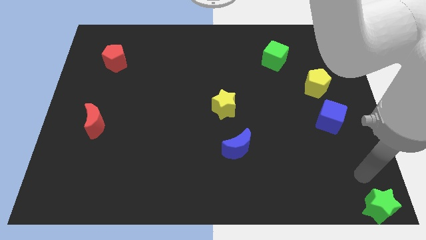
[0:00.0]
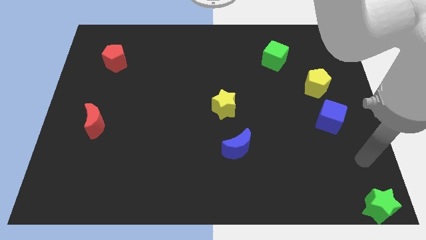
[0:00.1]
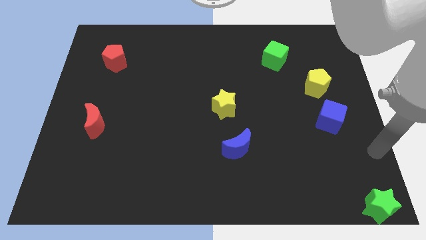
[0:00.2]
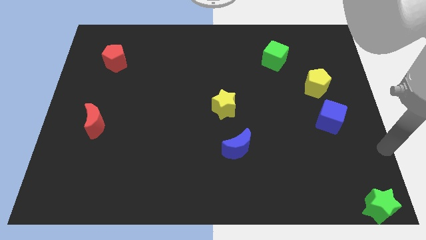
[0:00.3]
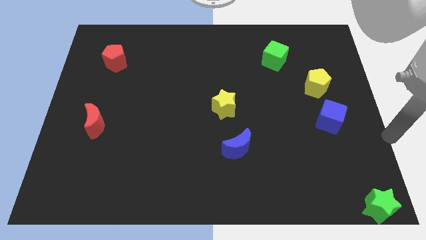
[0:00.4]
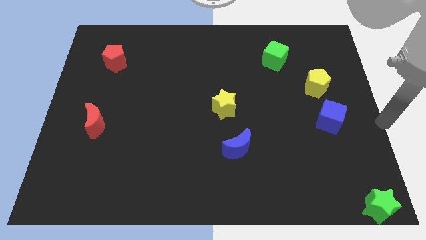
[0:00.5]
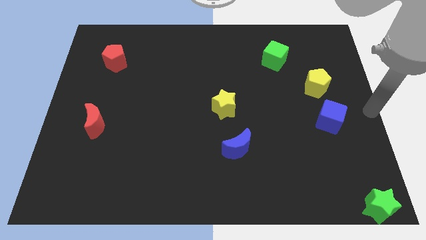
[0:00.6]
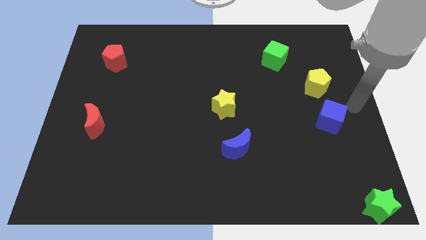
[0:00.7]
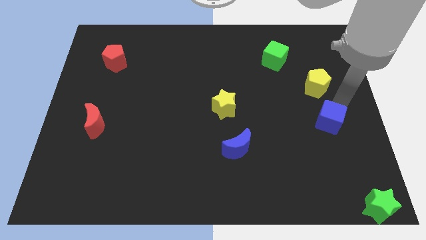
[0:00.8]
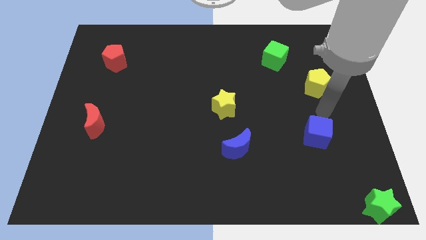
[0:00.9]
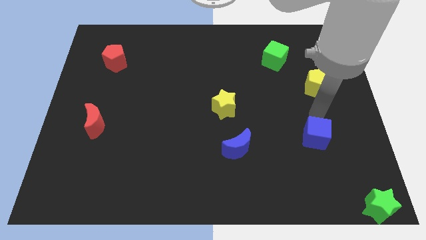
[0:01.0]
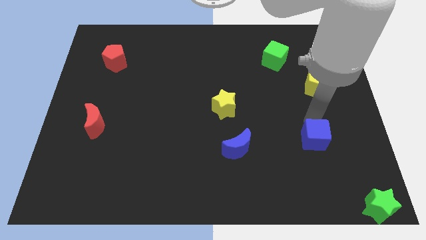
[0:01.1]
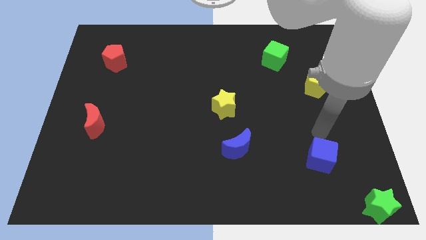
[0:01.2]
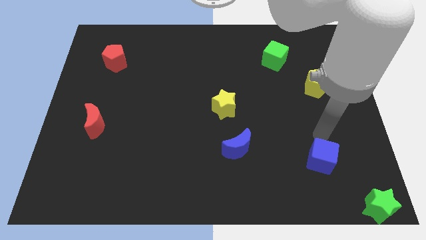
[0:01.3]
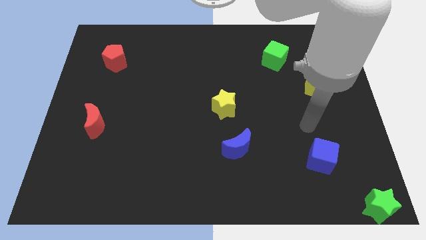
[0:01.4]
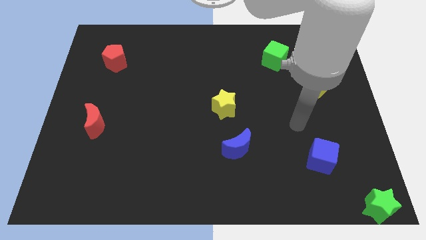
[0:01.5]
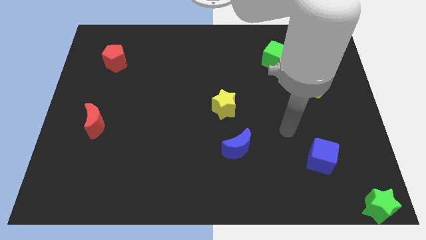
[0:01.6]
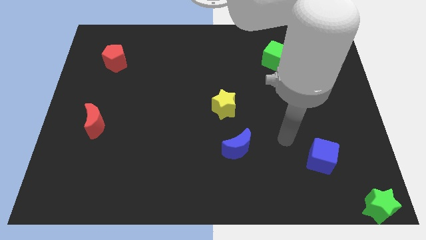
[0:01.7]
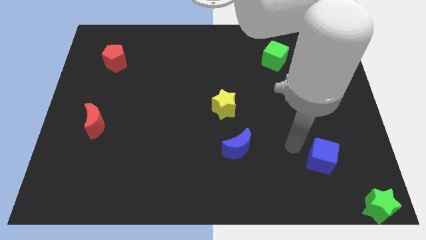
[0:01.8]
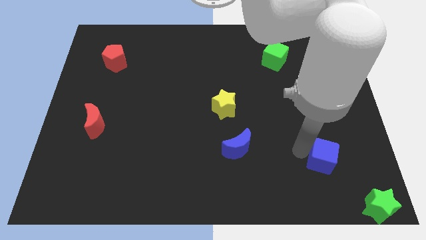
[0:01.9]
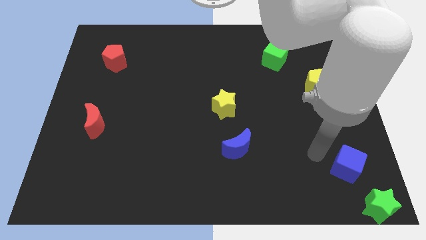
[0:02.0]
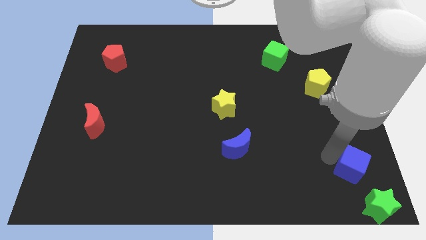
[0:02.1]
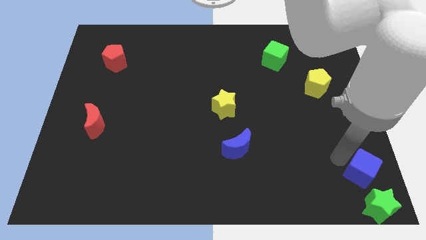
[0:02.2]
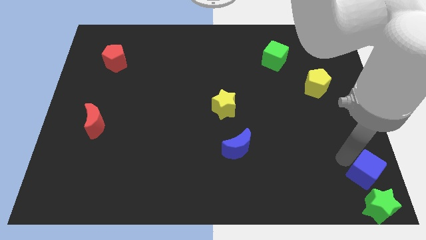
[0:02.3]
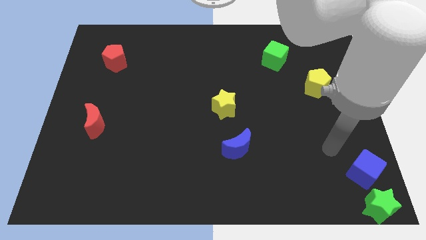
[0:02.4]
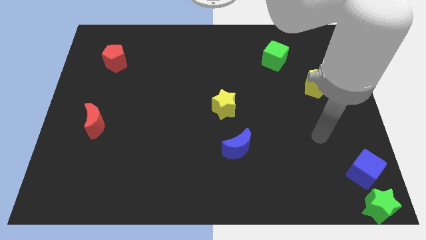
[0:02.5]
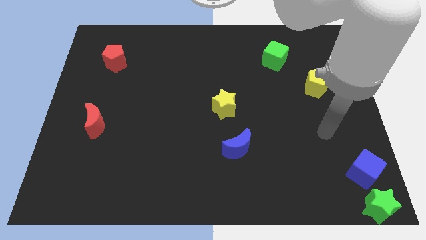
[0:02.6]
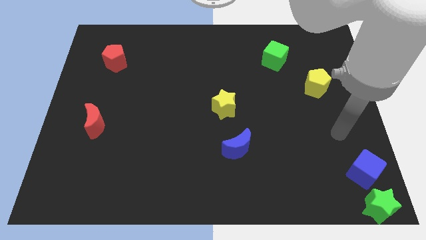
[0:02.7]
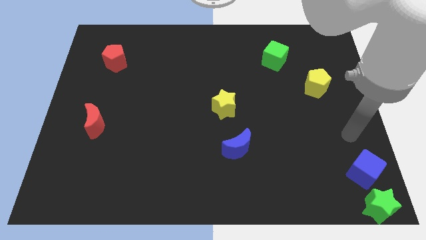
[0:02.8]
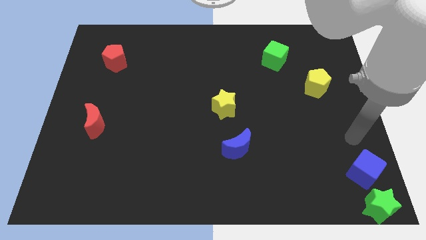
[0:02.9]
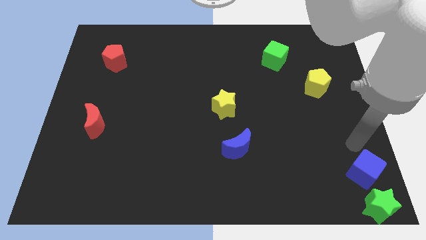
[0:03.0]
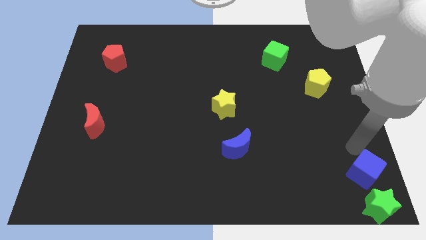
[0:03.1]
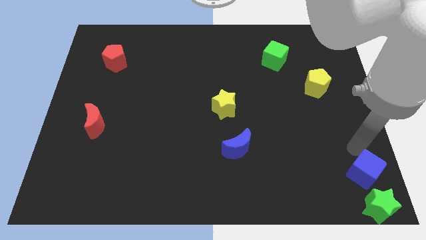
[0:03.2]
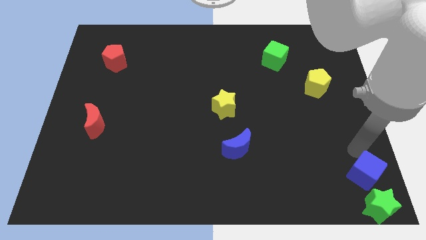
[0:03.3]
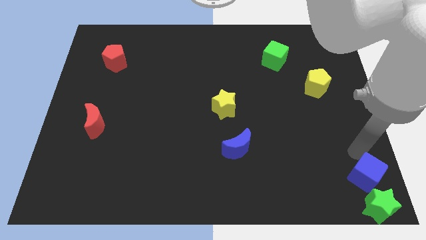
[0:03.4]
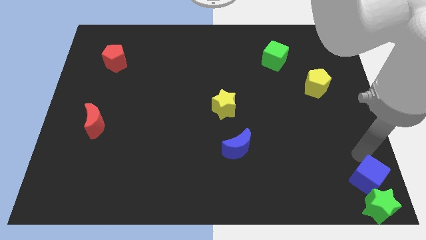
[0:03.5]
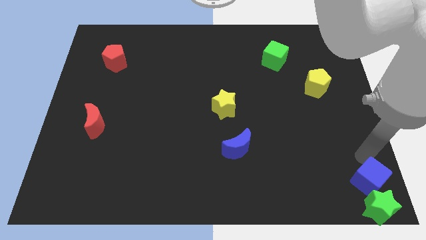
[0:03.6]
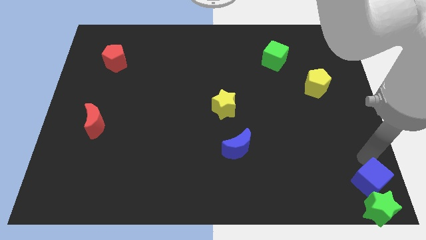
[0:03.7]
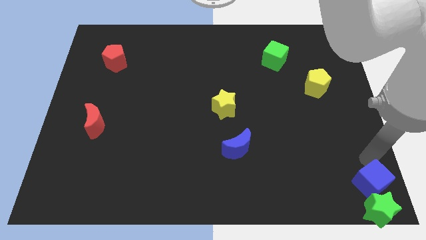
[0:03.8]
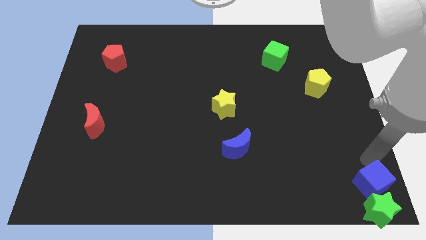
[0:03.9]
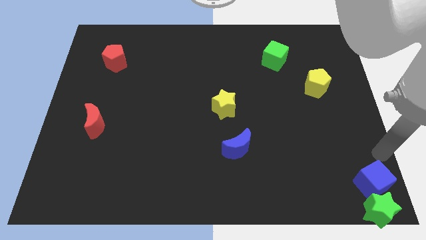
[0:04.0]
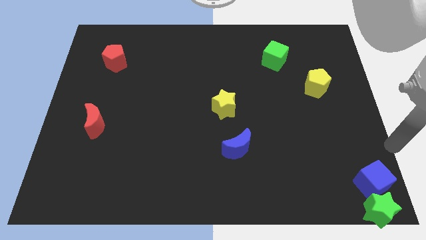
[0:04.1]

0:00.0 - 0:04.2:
move the blue cube to the top side of the green star

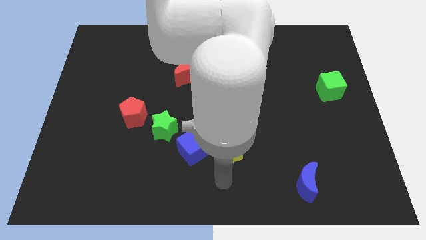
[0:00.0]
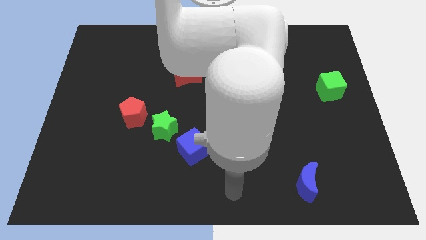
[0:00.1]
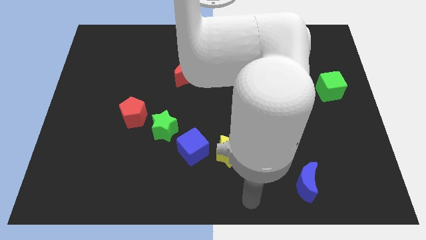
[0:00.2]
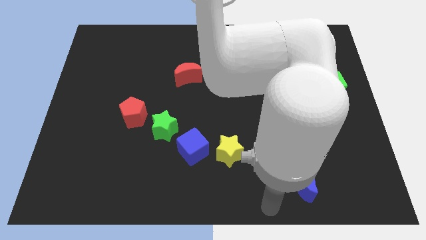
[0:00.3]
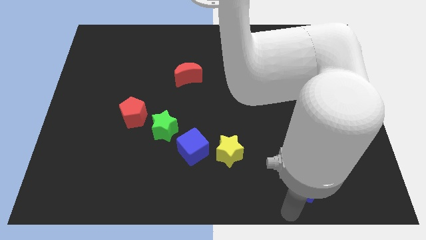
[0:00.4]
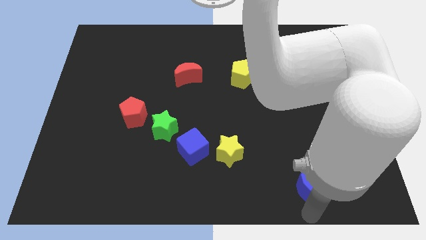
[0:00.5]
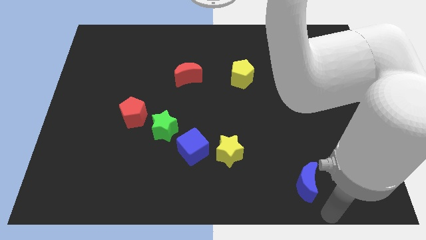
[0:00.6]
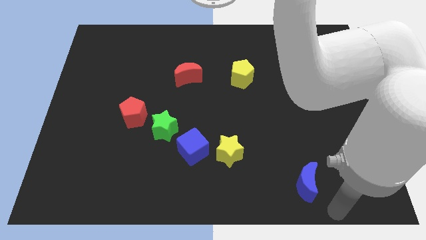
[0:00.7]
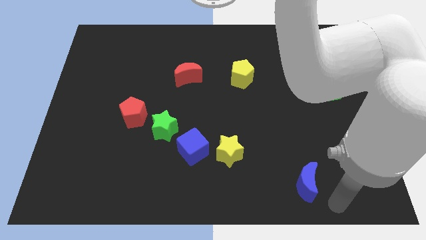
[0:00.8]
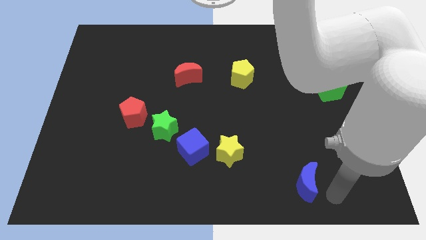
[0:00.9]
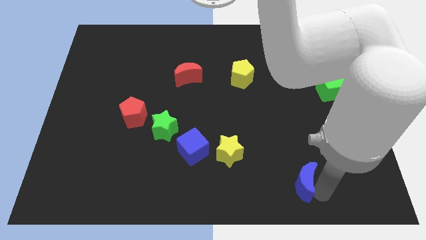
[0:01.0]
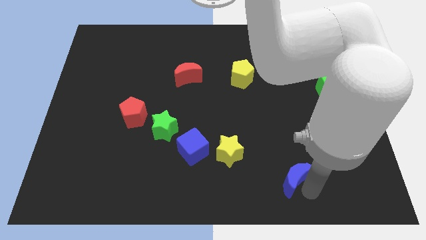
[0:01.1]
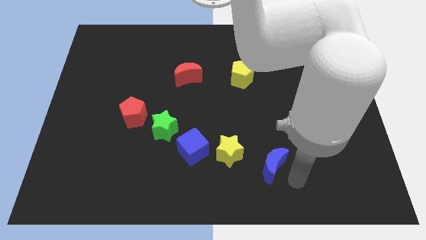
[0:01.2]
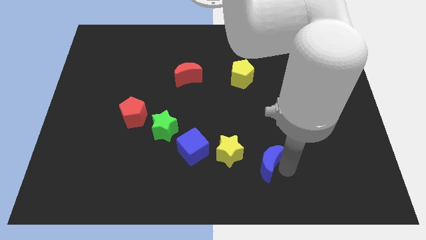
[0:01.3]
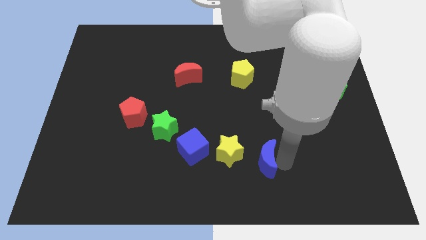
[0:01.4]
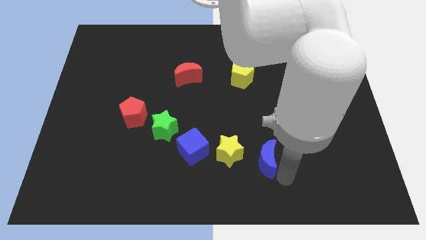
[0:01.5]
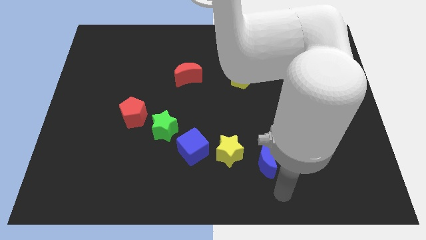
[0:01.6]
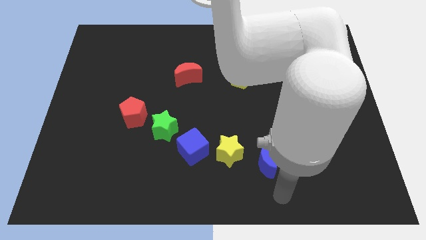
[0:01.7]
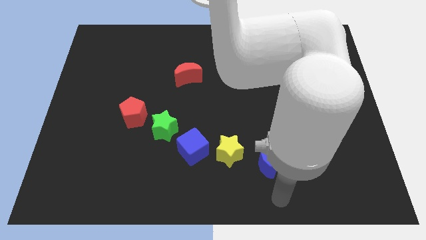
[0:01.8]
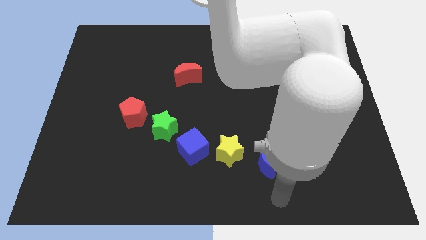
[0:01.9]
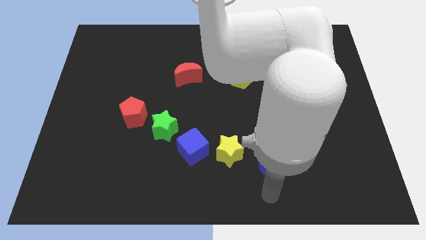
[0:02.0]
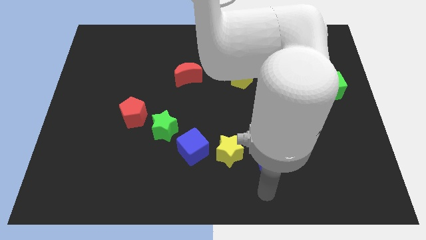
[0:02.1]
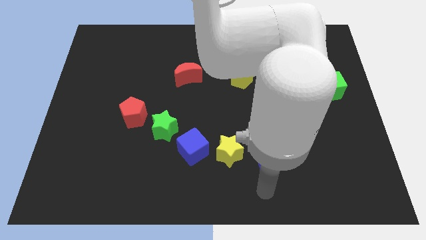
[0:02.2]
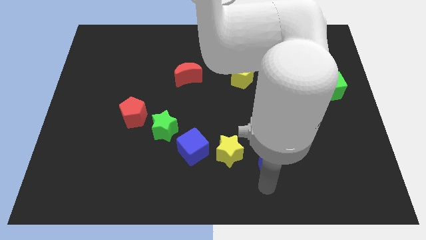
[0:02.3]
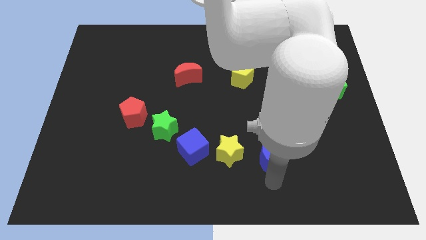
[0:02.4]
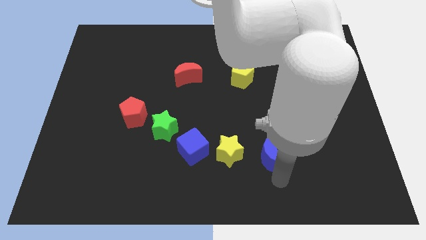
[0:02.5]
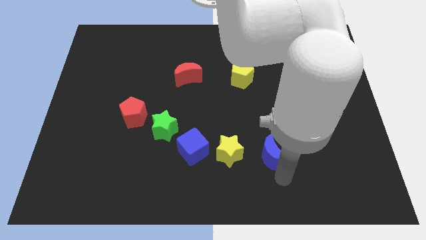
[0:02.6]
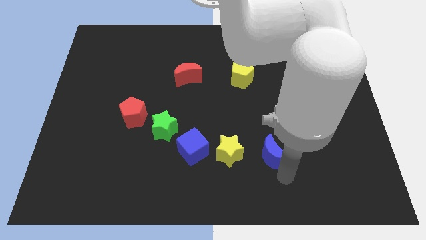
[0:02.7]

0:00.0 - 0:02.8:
move the blue crescent to the right of the yellow star

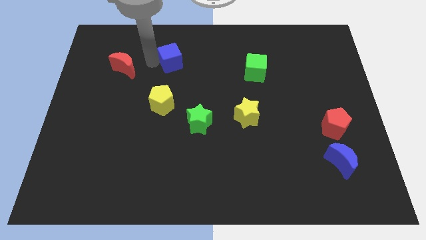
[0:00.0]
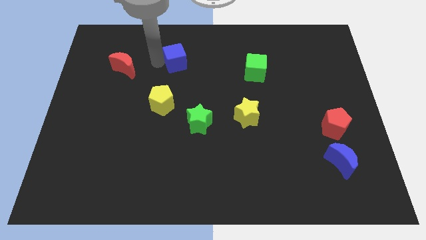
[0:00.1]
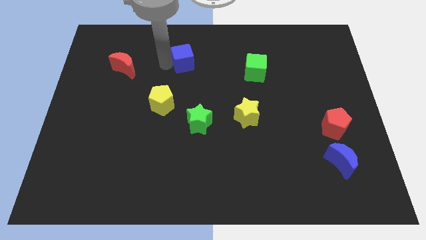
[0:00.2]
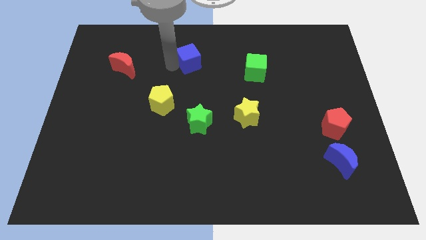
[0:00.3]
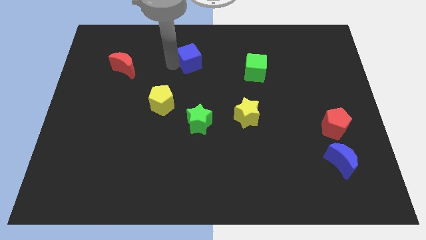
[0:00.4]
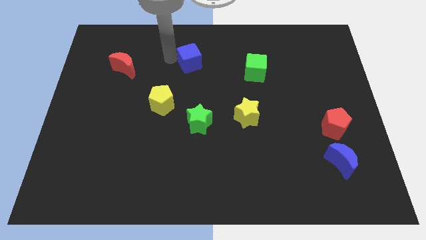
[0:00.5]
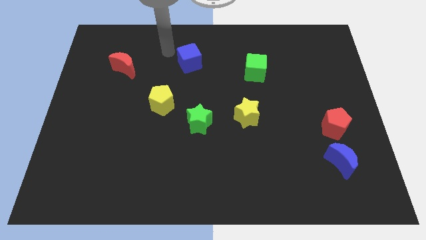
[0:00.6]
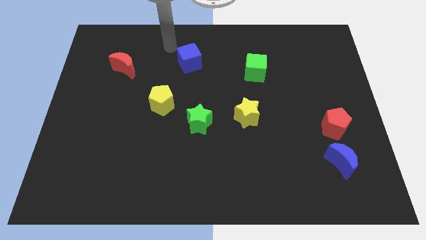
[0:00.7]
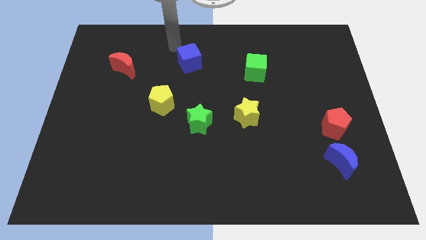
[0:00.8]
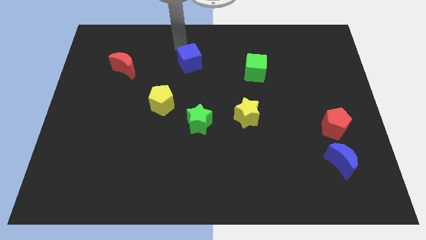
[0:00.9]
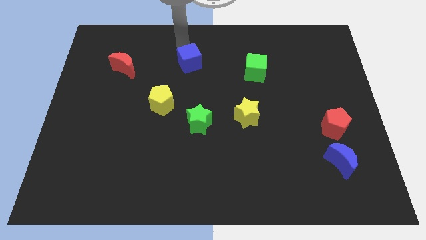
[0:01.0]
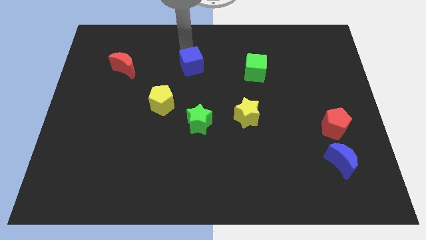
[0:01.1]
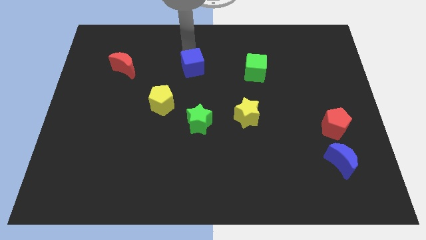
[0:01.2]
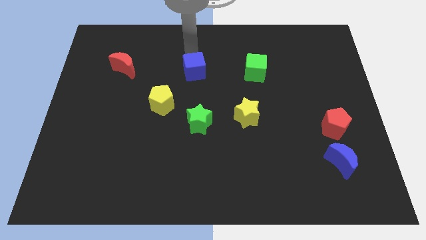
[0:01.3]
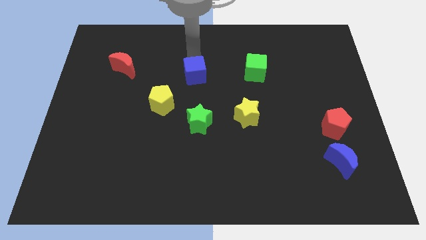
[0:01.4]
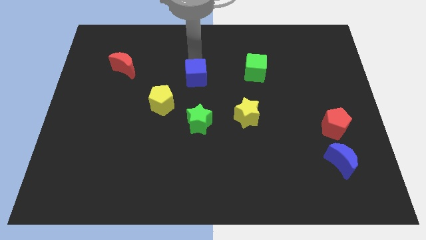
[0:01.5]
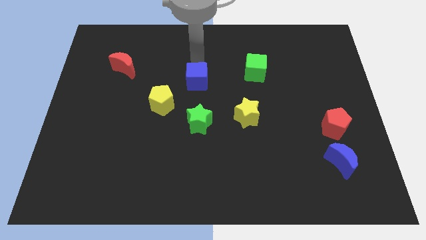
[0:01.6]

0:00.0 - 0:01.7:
move the blue cube on top of green star

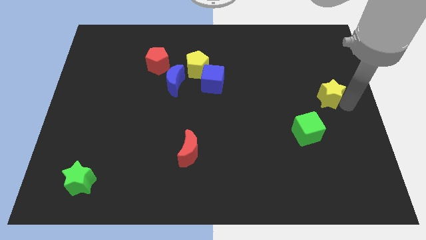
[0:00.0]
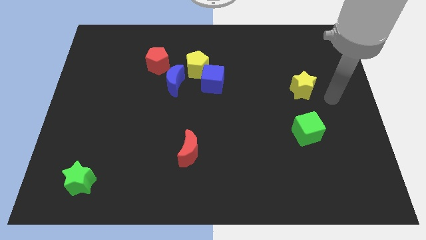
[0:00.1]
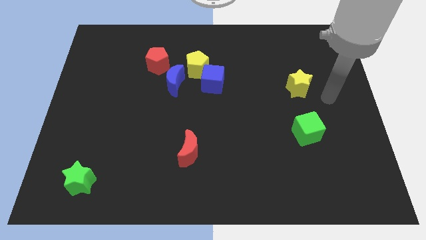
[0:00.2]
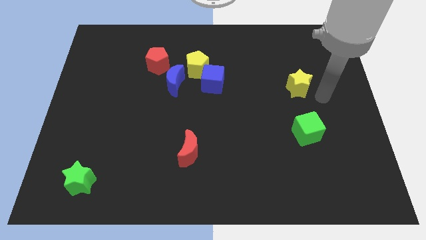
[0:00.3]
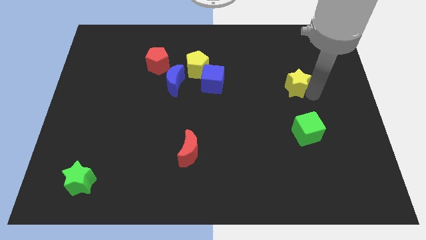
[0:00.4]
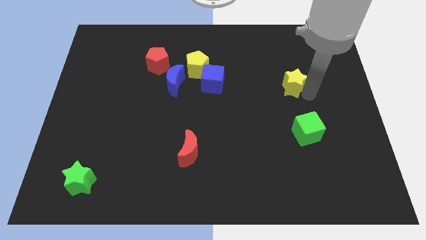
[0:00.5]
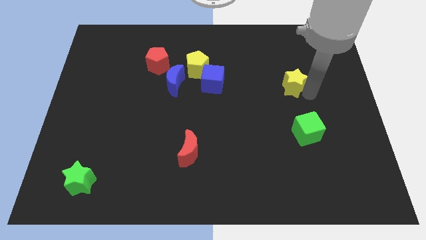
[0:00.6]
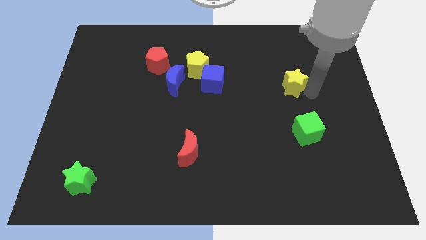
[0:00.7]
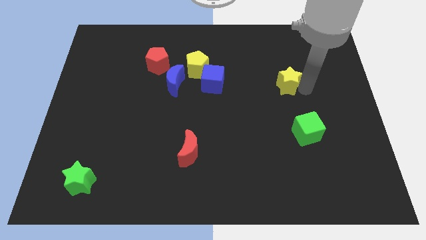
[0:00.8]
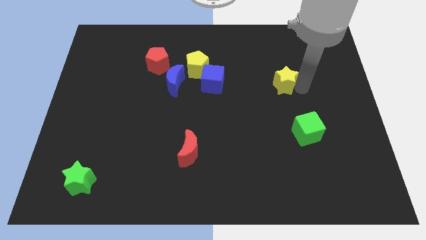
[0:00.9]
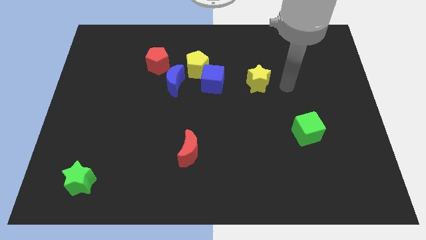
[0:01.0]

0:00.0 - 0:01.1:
slide yellow star to the right of blue cube
